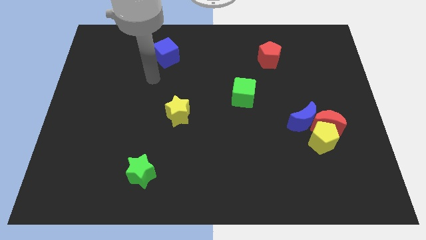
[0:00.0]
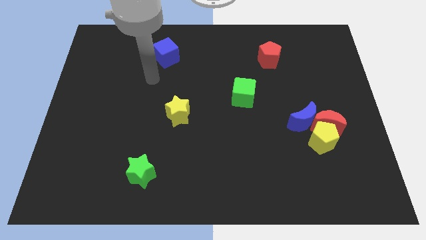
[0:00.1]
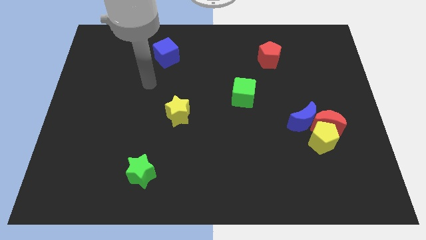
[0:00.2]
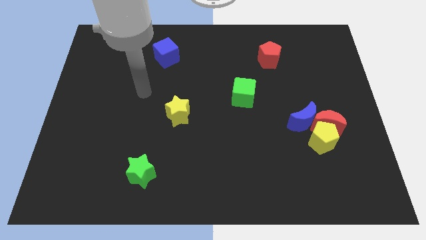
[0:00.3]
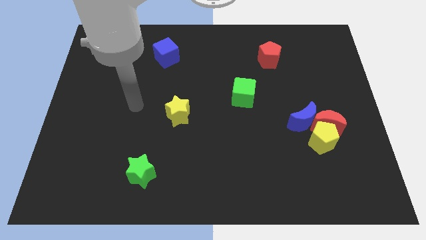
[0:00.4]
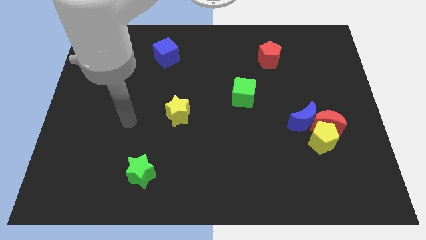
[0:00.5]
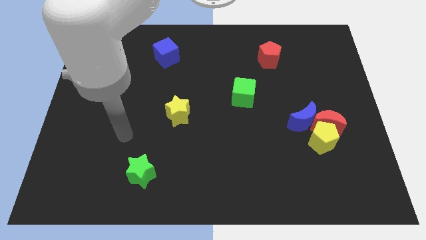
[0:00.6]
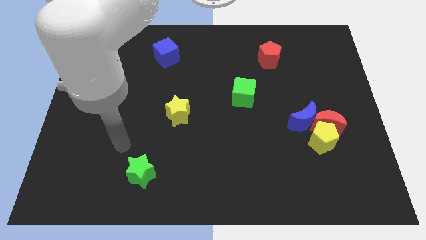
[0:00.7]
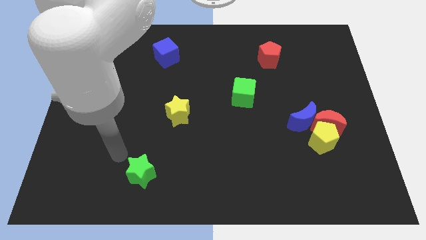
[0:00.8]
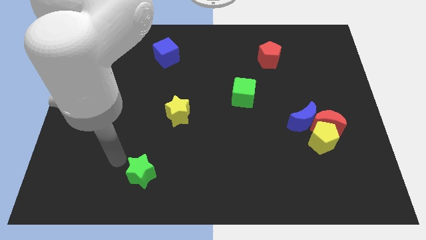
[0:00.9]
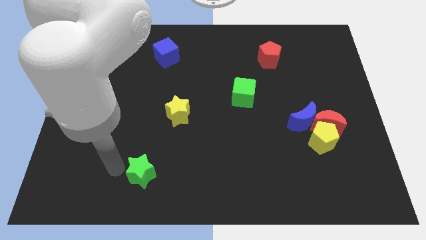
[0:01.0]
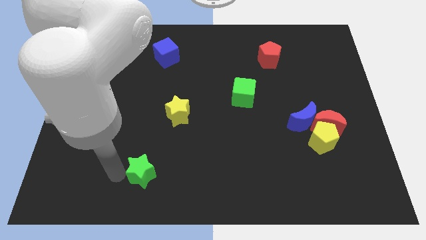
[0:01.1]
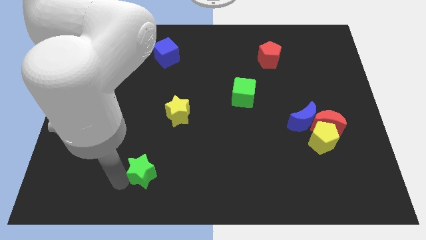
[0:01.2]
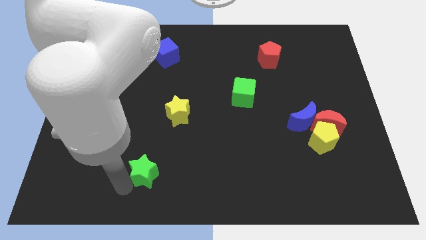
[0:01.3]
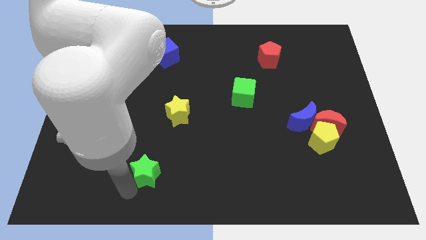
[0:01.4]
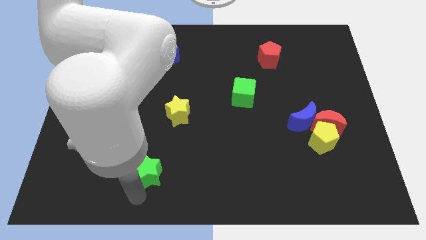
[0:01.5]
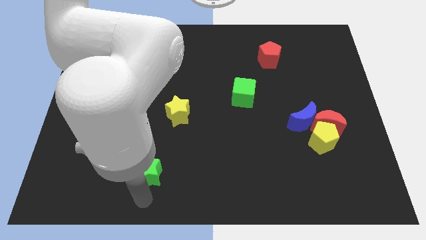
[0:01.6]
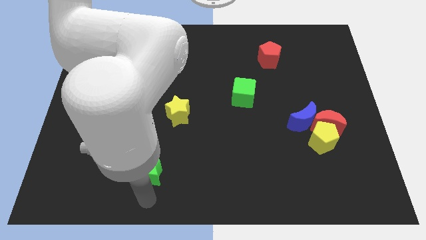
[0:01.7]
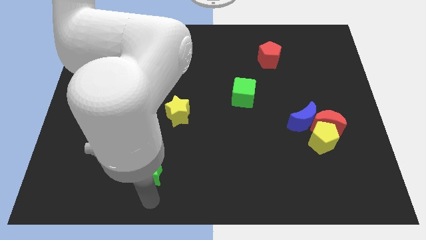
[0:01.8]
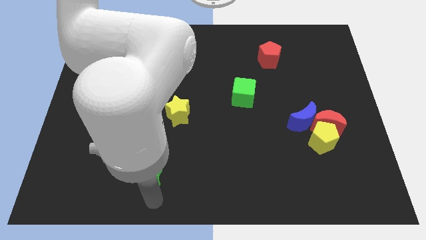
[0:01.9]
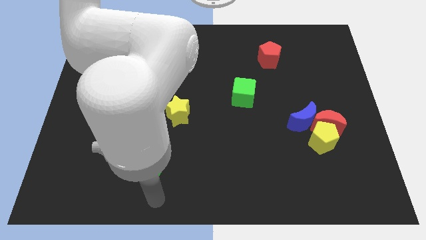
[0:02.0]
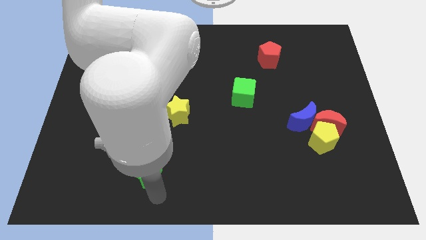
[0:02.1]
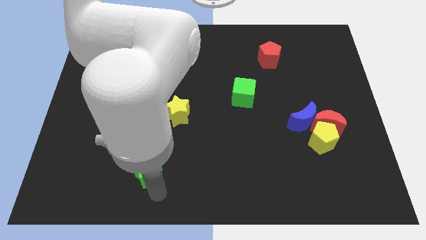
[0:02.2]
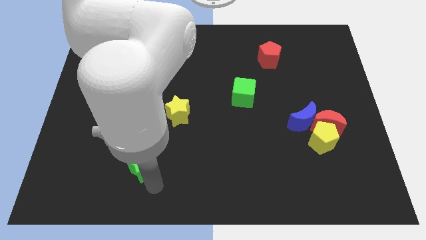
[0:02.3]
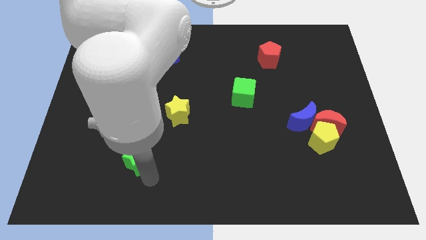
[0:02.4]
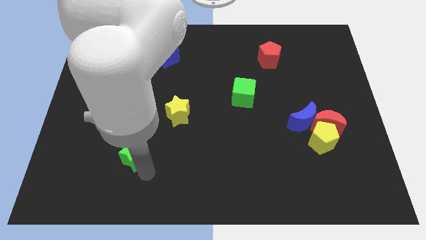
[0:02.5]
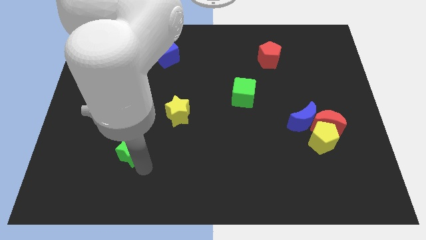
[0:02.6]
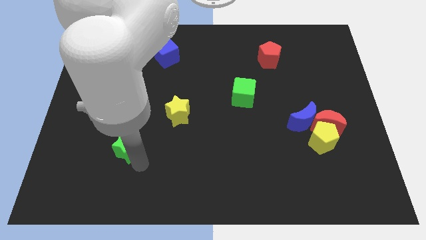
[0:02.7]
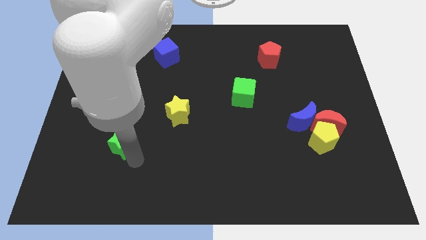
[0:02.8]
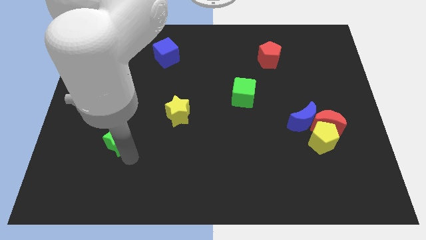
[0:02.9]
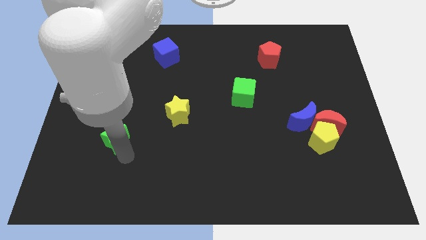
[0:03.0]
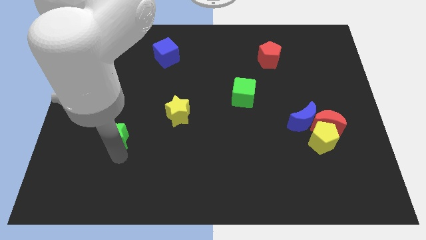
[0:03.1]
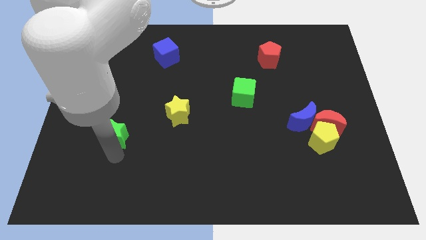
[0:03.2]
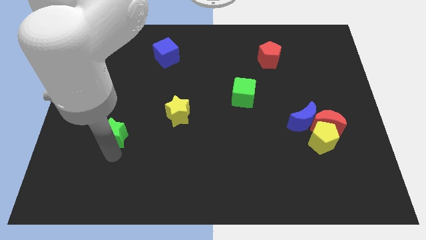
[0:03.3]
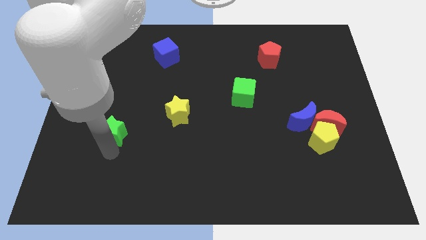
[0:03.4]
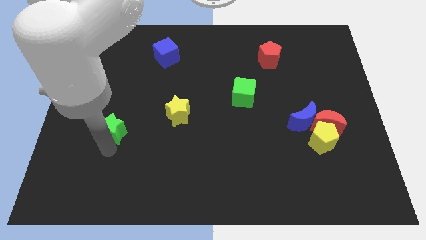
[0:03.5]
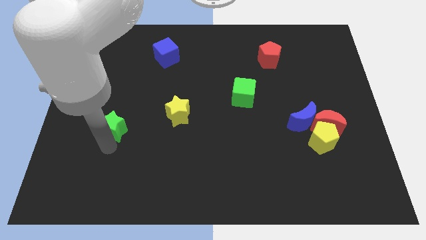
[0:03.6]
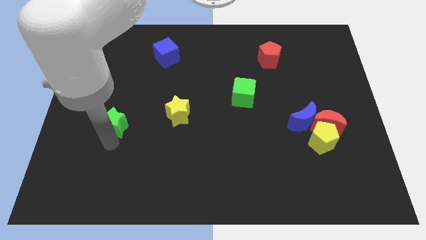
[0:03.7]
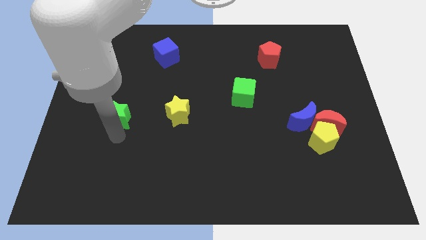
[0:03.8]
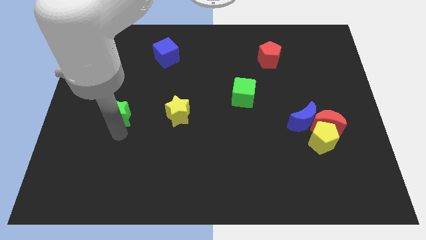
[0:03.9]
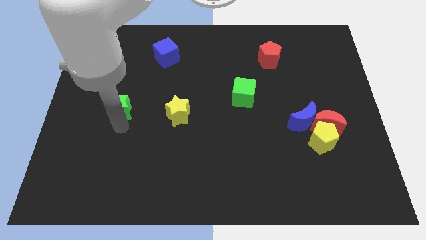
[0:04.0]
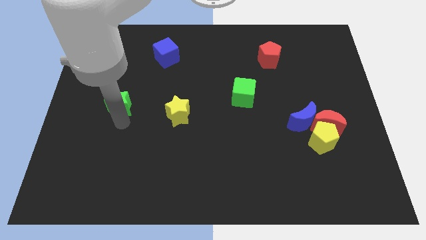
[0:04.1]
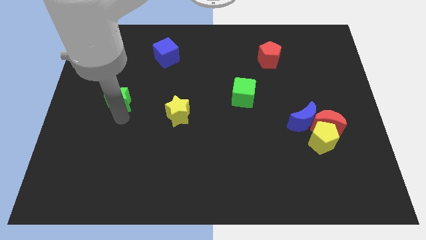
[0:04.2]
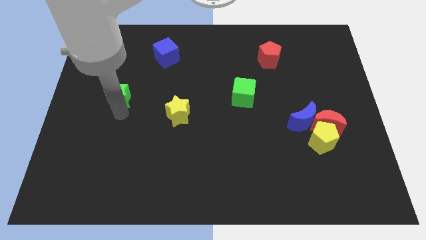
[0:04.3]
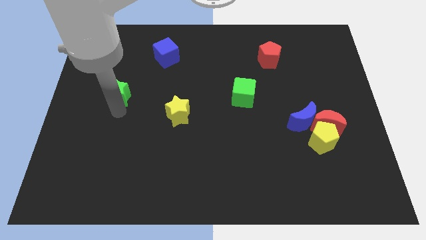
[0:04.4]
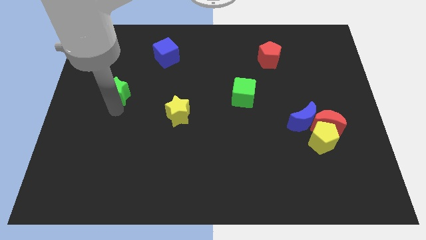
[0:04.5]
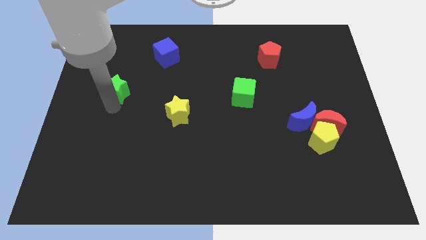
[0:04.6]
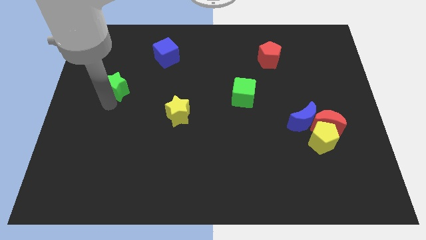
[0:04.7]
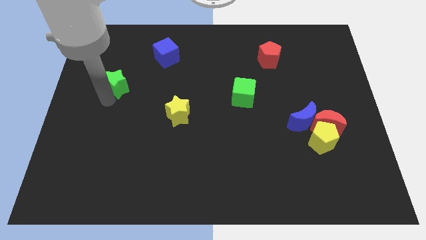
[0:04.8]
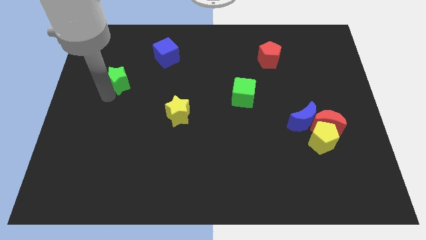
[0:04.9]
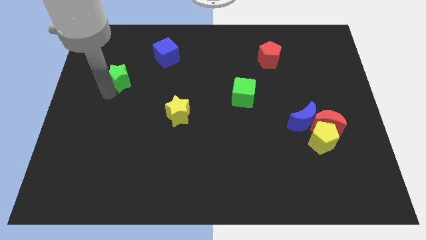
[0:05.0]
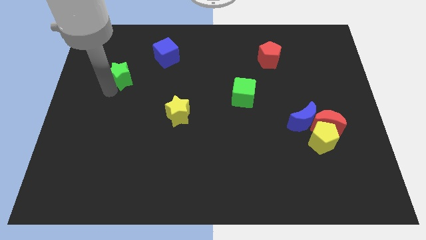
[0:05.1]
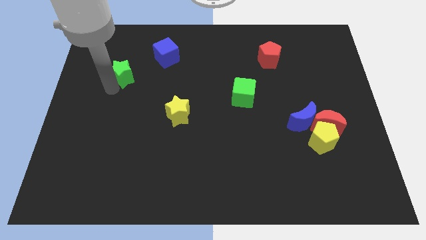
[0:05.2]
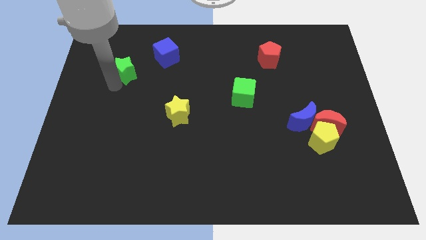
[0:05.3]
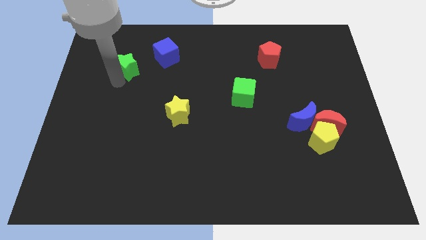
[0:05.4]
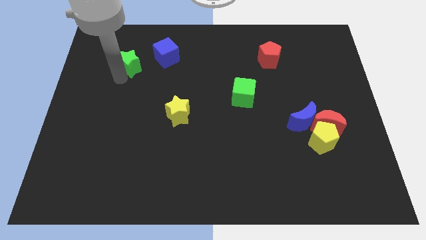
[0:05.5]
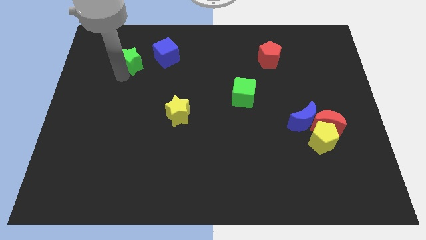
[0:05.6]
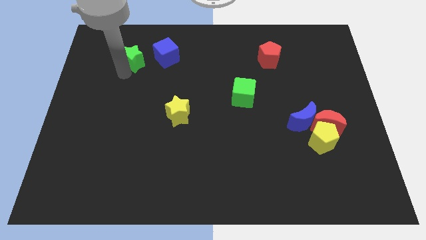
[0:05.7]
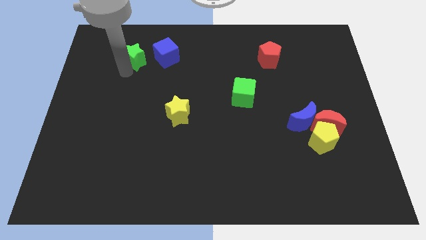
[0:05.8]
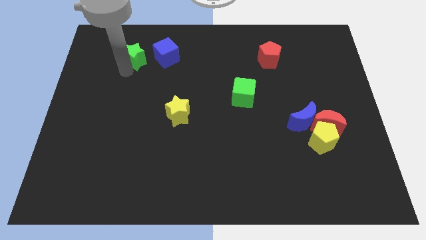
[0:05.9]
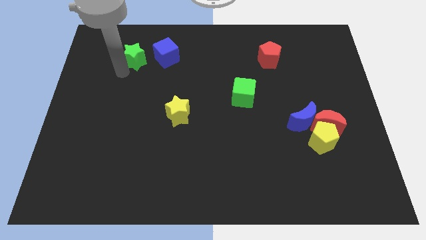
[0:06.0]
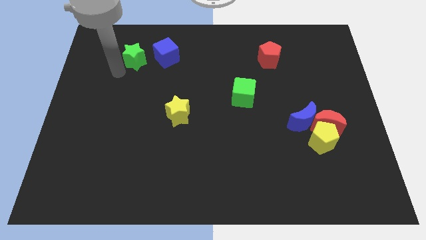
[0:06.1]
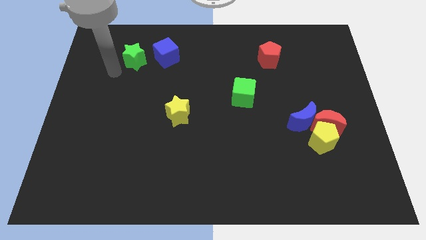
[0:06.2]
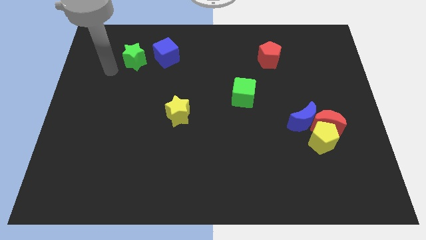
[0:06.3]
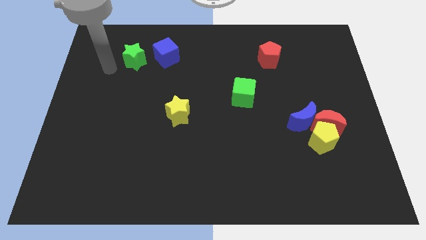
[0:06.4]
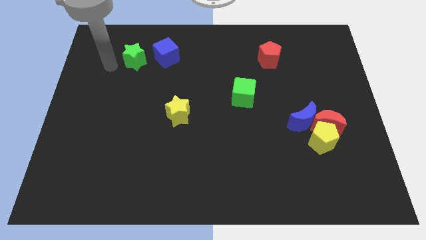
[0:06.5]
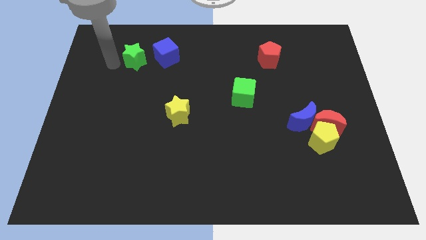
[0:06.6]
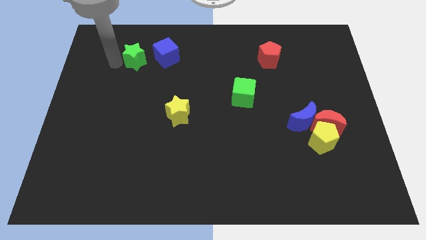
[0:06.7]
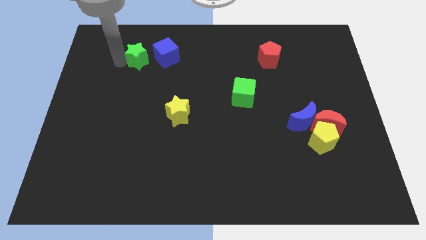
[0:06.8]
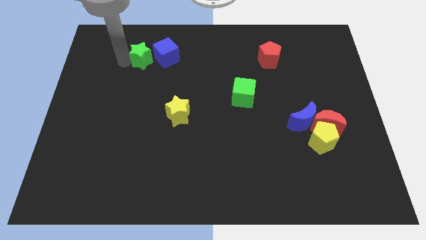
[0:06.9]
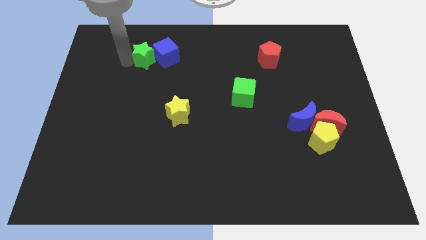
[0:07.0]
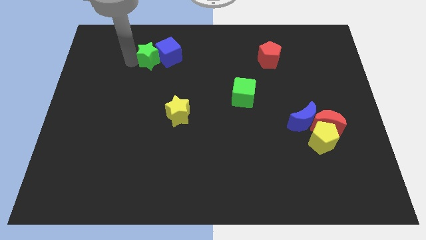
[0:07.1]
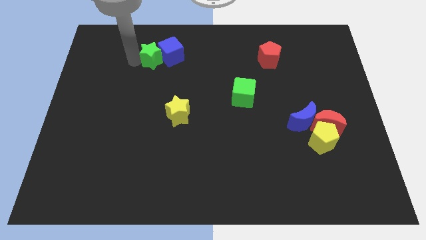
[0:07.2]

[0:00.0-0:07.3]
move the green star close to the blue cube

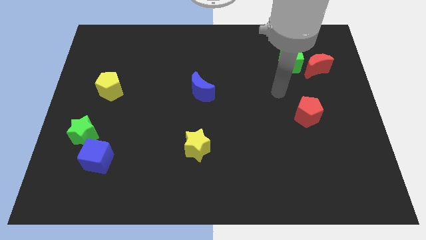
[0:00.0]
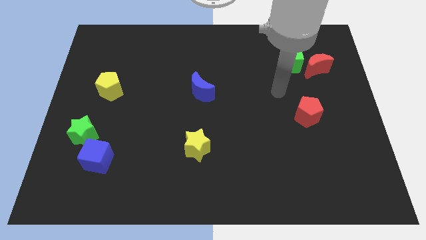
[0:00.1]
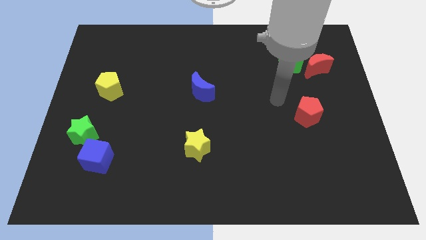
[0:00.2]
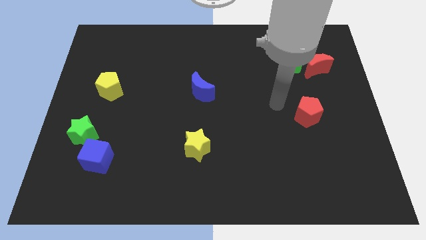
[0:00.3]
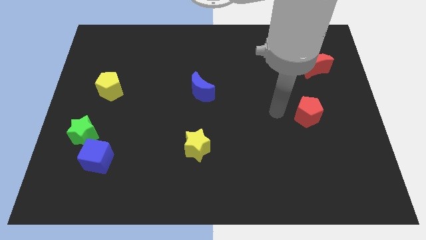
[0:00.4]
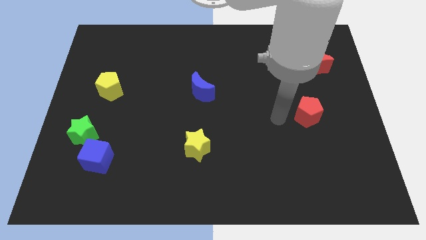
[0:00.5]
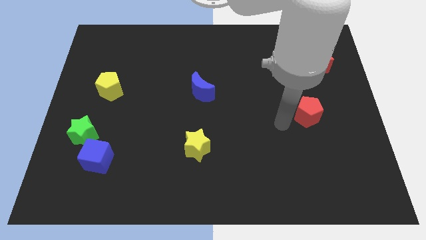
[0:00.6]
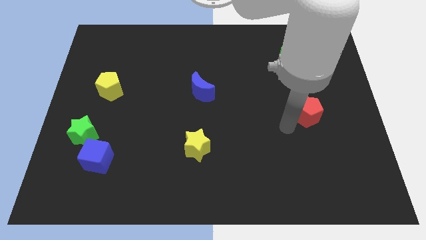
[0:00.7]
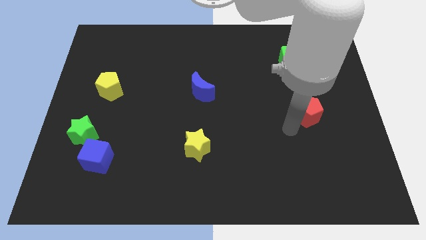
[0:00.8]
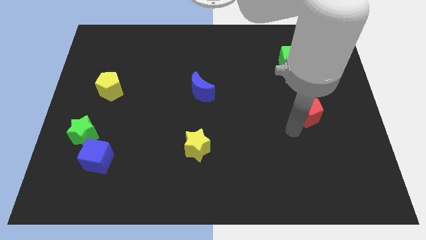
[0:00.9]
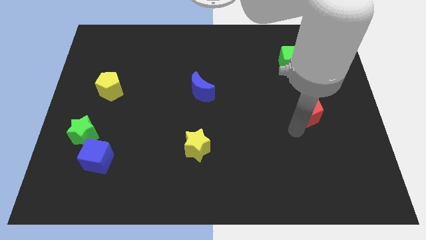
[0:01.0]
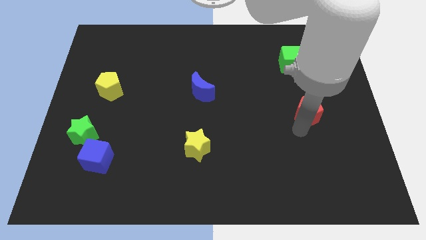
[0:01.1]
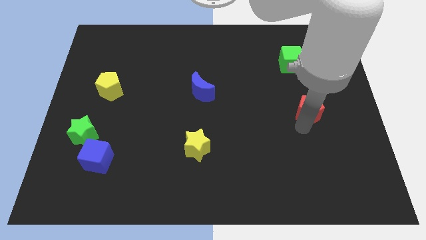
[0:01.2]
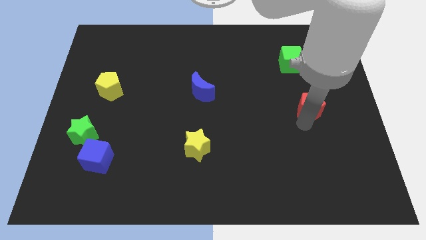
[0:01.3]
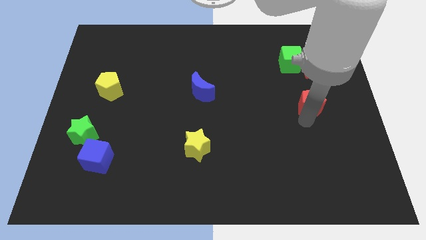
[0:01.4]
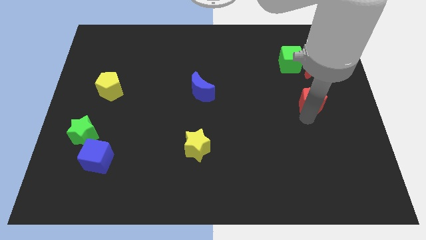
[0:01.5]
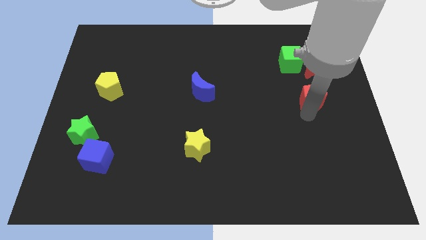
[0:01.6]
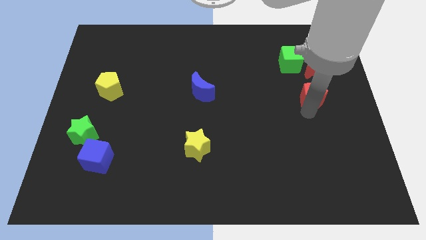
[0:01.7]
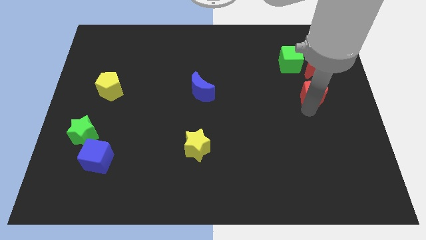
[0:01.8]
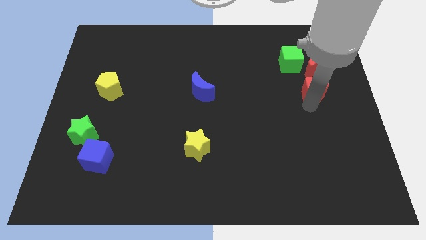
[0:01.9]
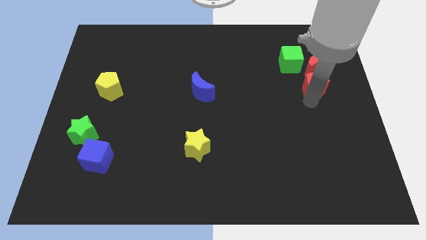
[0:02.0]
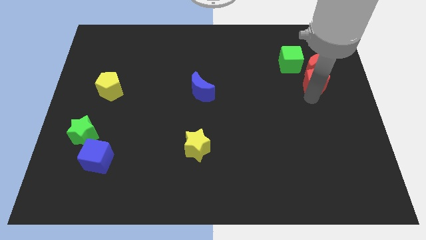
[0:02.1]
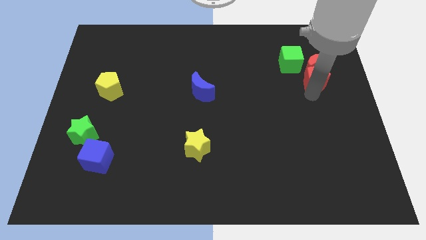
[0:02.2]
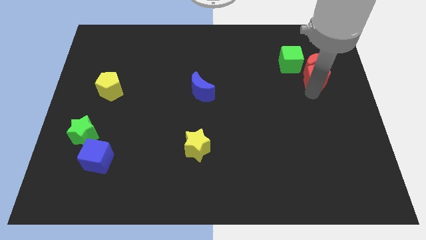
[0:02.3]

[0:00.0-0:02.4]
move the red pentagon to the red moon
